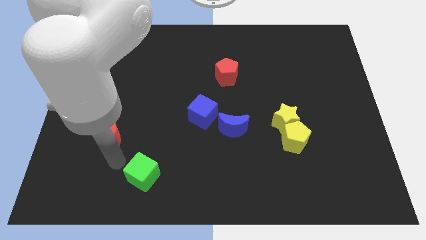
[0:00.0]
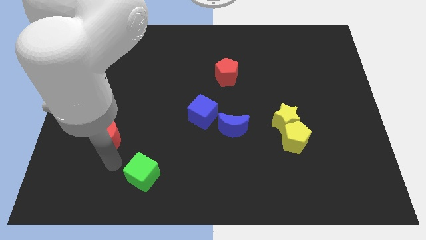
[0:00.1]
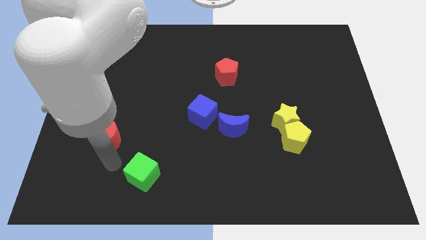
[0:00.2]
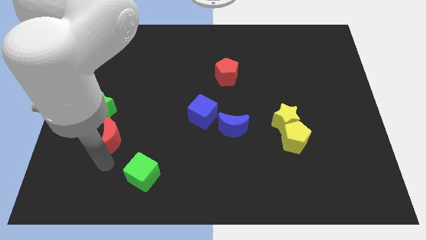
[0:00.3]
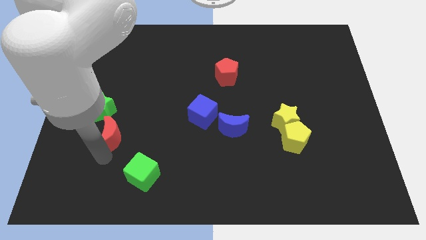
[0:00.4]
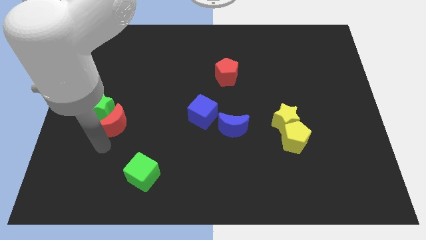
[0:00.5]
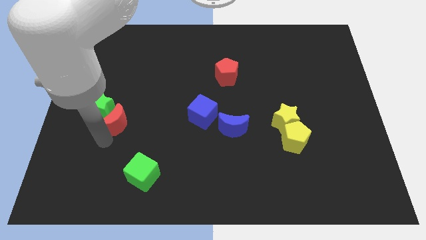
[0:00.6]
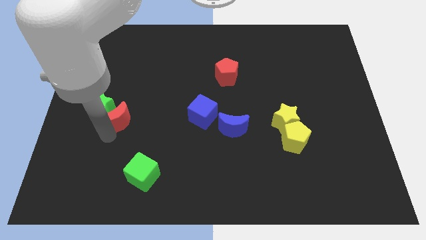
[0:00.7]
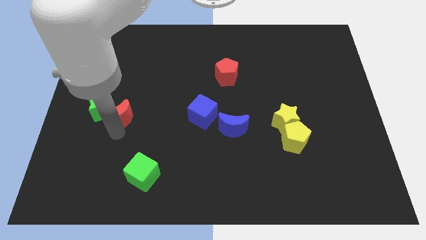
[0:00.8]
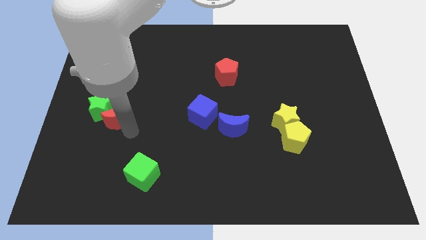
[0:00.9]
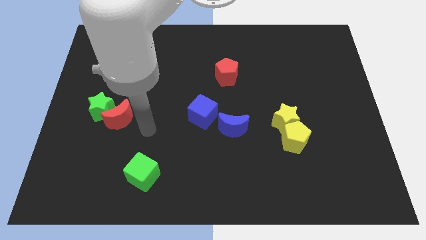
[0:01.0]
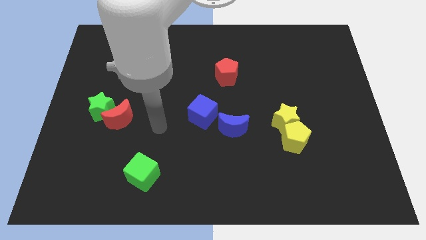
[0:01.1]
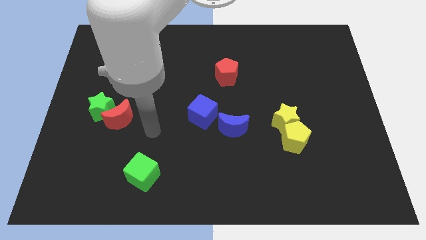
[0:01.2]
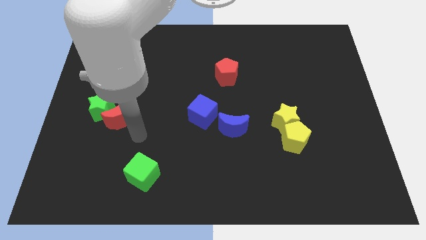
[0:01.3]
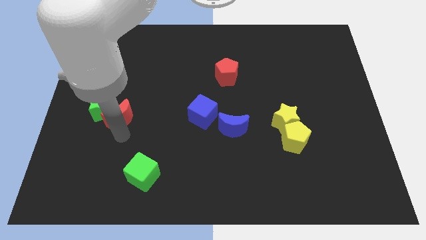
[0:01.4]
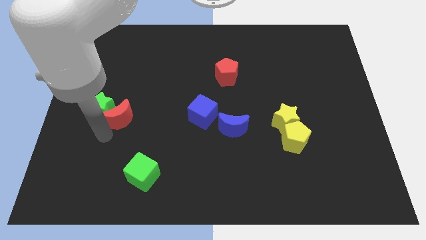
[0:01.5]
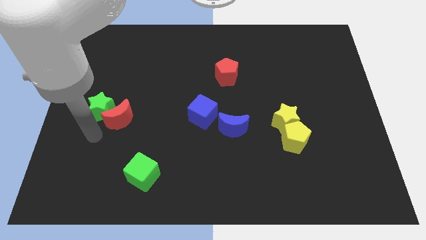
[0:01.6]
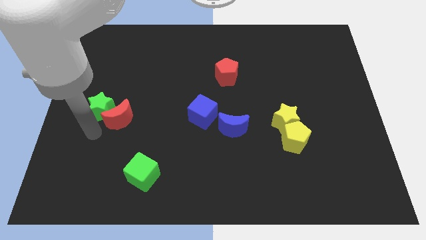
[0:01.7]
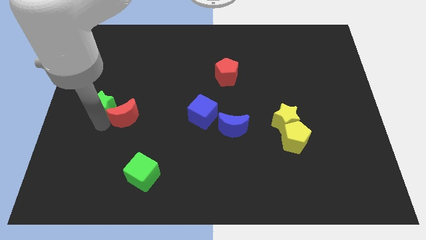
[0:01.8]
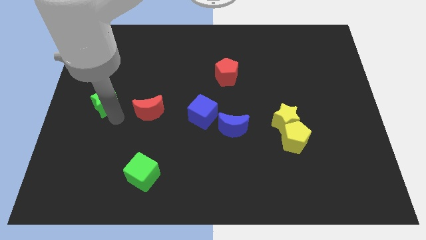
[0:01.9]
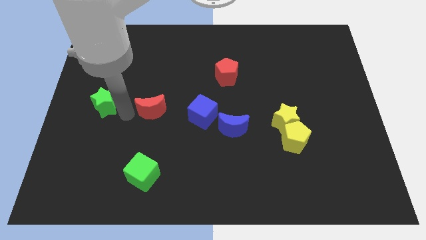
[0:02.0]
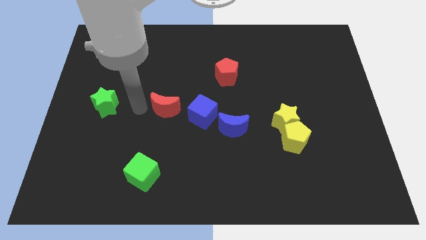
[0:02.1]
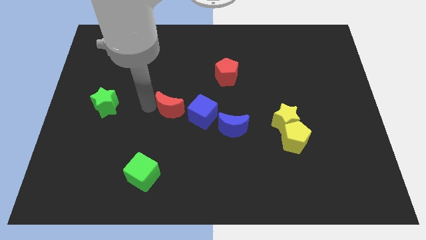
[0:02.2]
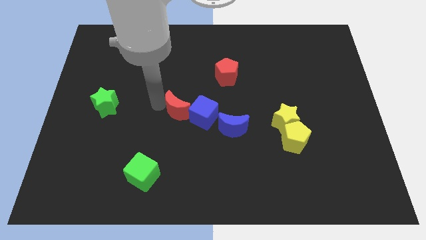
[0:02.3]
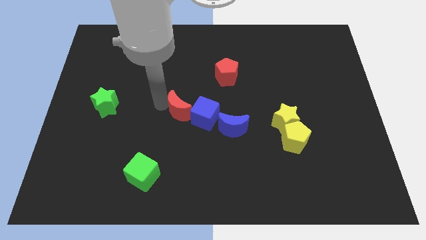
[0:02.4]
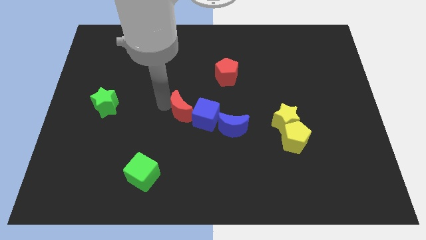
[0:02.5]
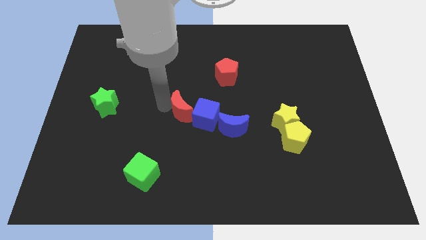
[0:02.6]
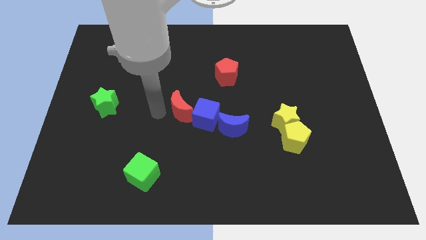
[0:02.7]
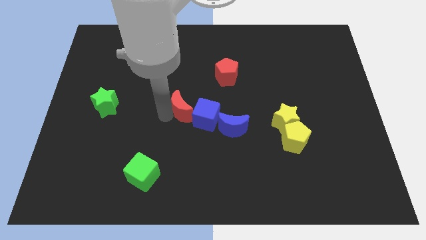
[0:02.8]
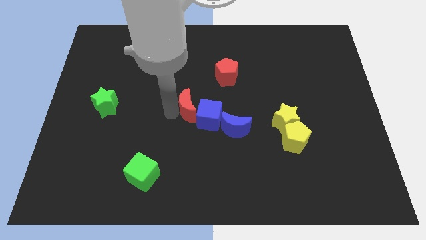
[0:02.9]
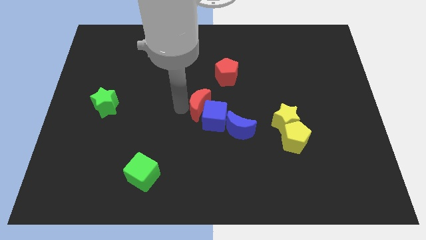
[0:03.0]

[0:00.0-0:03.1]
push the red crescent to the left of the blue cube

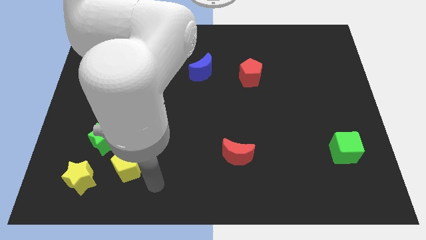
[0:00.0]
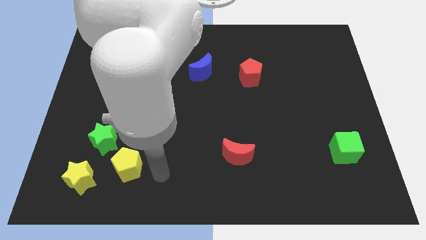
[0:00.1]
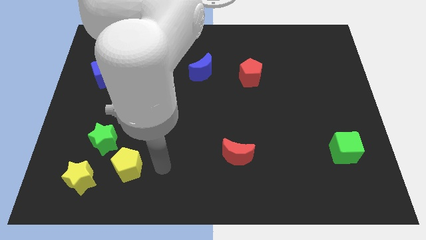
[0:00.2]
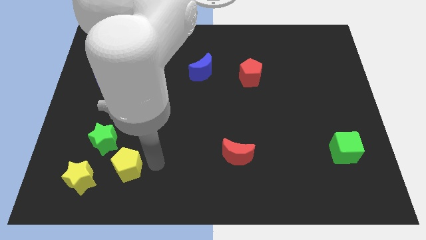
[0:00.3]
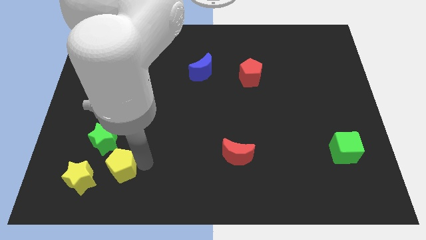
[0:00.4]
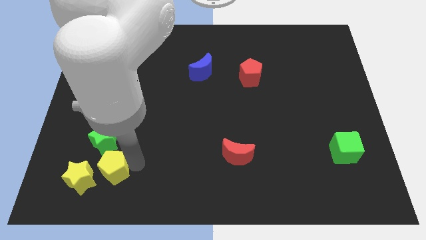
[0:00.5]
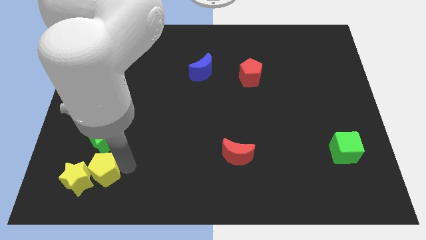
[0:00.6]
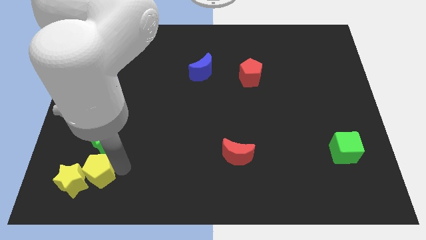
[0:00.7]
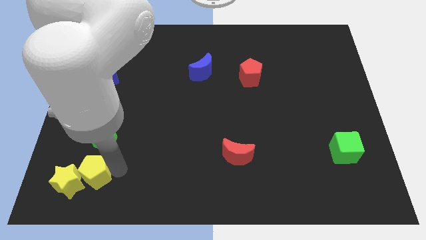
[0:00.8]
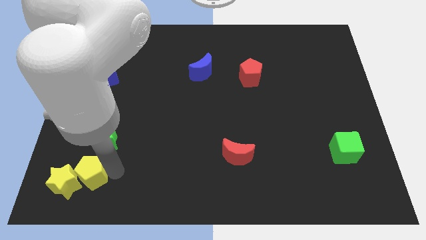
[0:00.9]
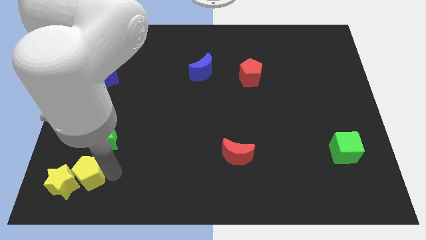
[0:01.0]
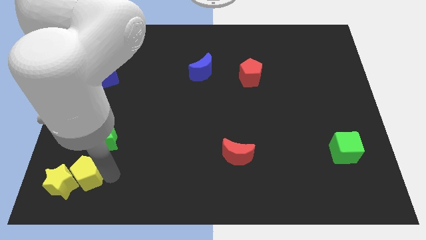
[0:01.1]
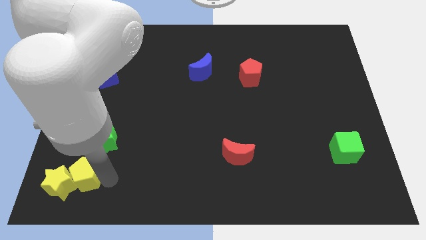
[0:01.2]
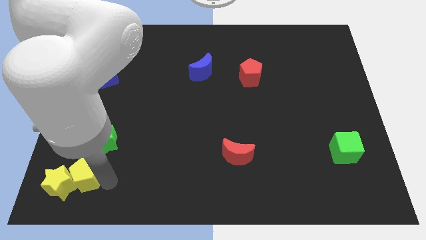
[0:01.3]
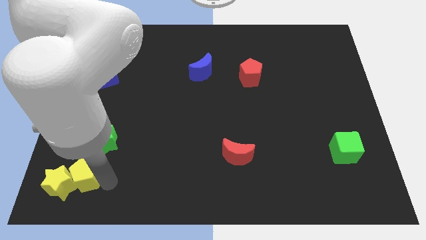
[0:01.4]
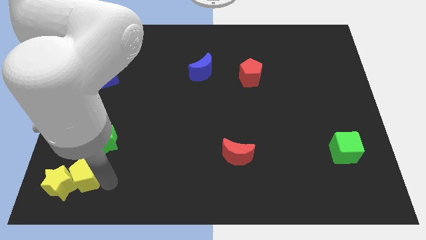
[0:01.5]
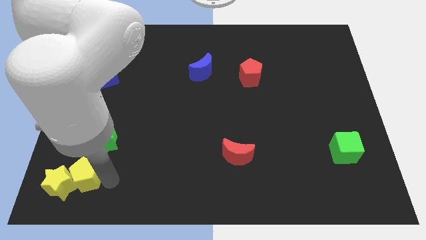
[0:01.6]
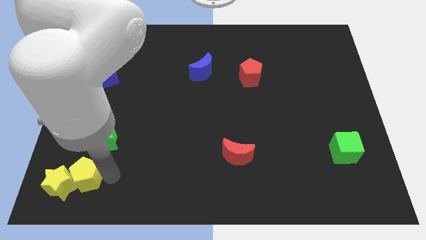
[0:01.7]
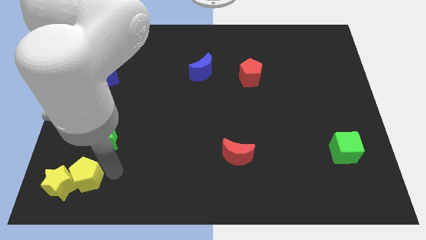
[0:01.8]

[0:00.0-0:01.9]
push the yellow pentagon into yellow star

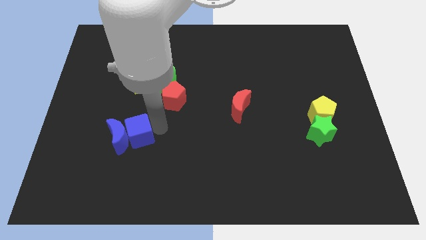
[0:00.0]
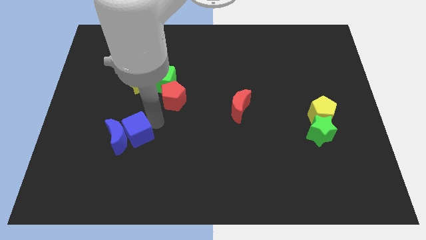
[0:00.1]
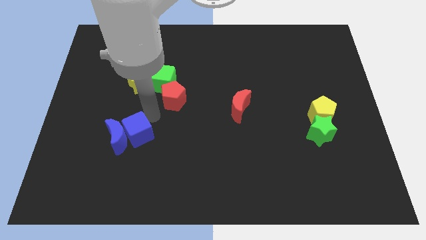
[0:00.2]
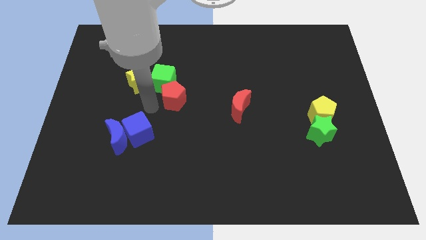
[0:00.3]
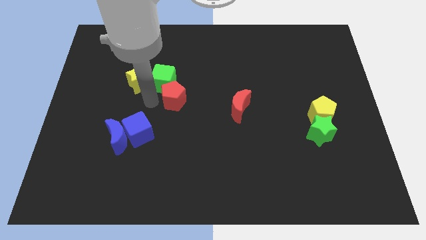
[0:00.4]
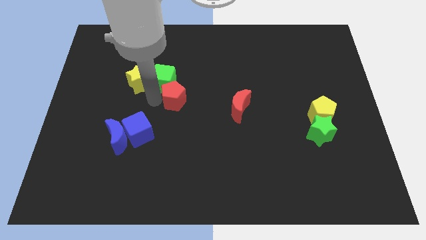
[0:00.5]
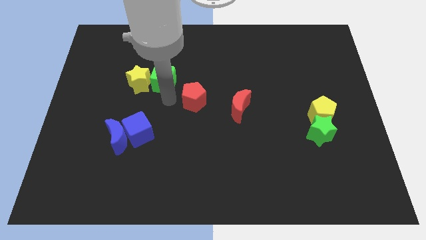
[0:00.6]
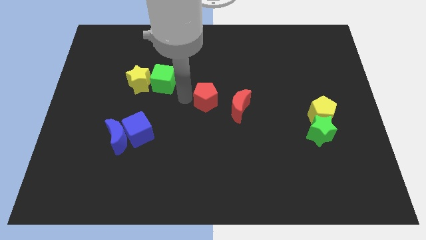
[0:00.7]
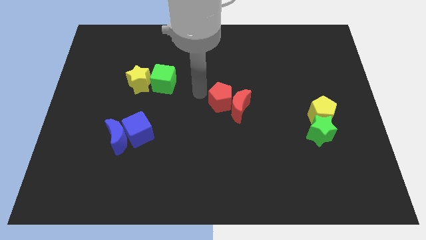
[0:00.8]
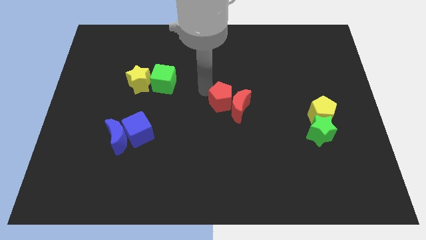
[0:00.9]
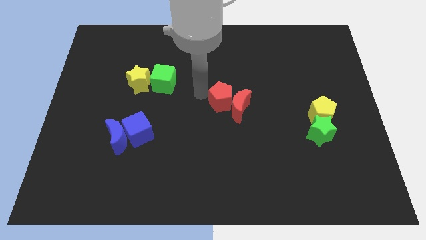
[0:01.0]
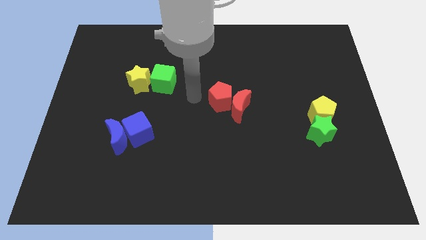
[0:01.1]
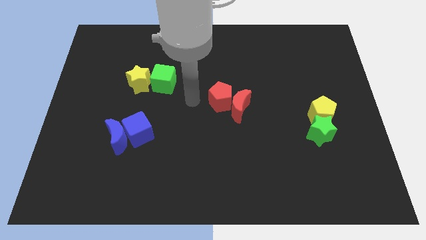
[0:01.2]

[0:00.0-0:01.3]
slide the red pentagon into the red crescent

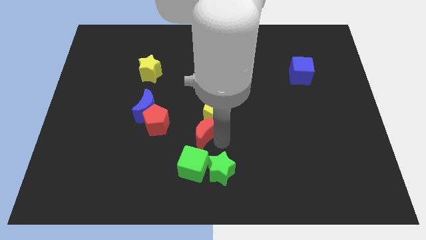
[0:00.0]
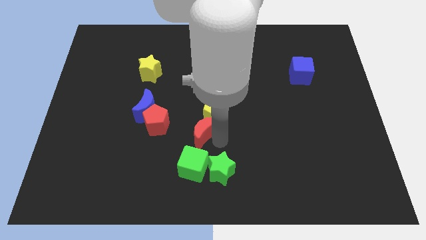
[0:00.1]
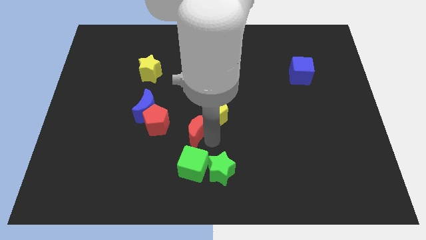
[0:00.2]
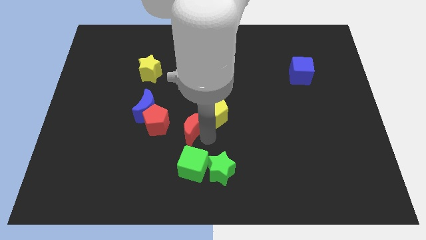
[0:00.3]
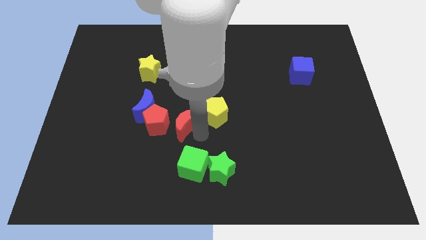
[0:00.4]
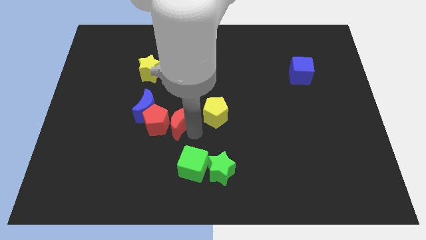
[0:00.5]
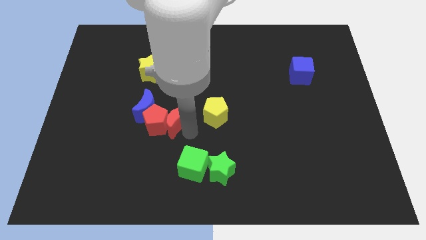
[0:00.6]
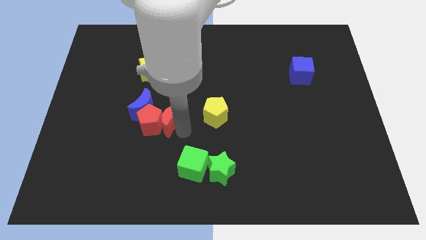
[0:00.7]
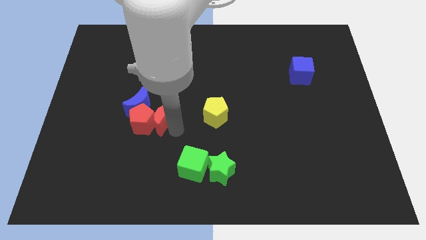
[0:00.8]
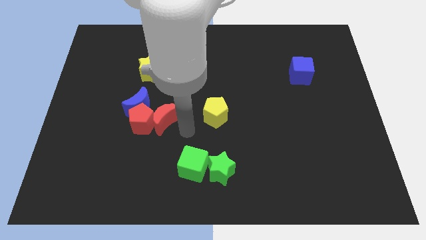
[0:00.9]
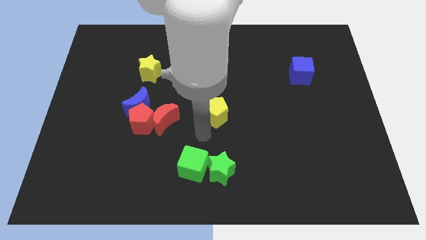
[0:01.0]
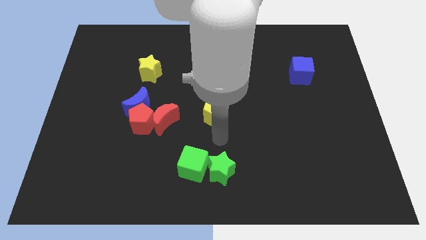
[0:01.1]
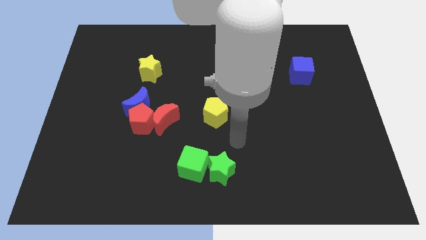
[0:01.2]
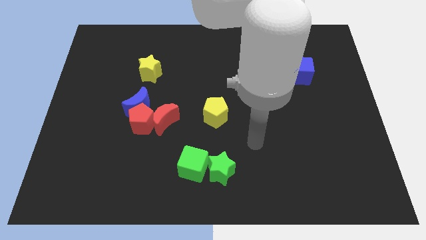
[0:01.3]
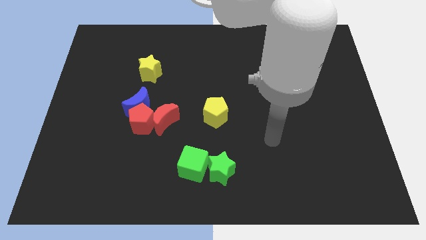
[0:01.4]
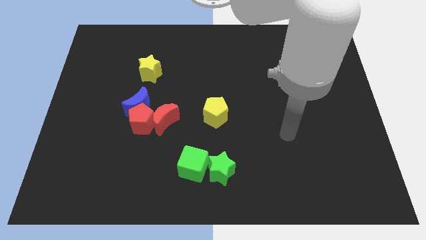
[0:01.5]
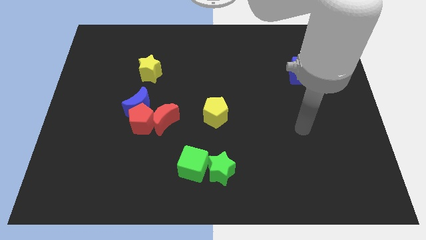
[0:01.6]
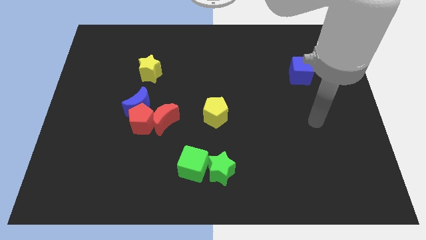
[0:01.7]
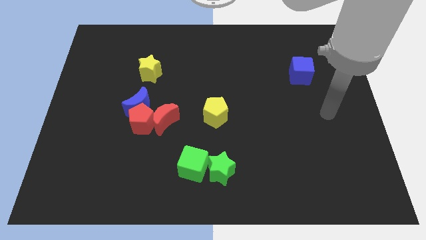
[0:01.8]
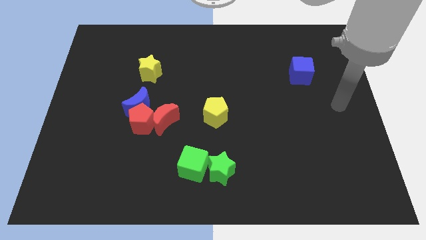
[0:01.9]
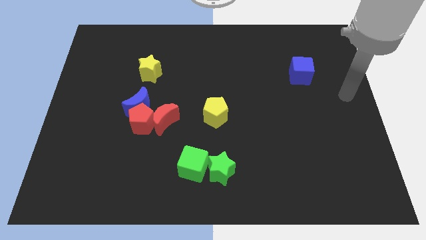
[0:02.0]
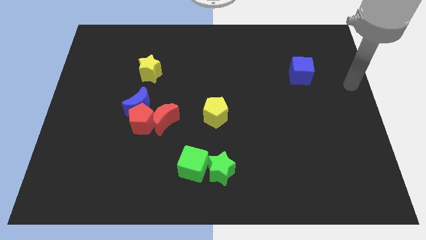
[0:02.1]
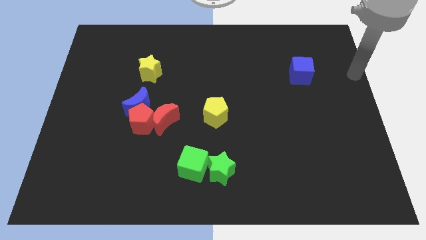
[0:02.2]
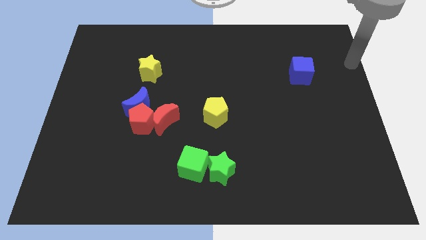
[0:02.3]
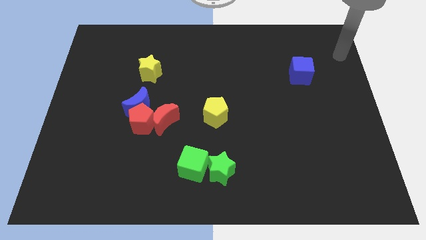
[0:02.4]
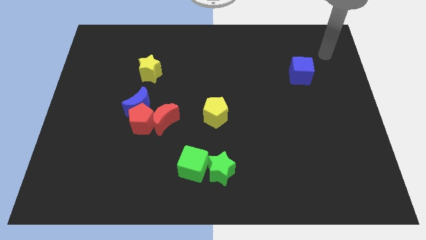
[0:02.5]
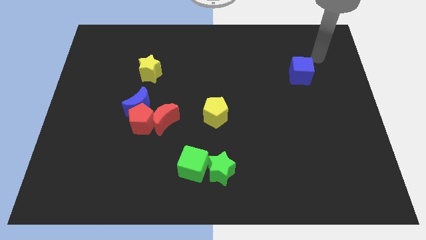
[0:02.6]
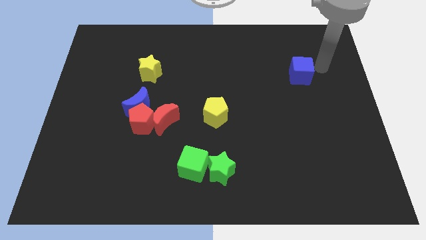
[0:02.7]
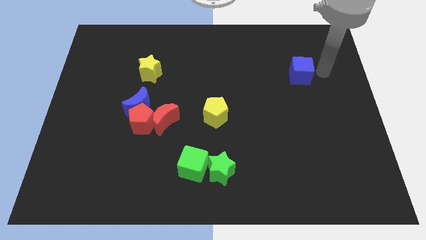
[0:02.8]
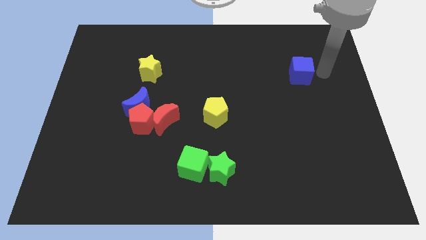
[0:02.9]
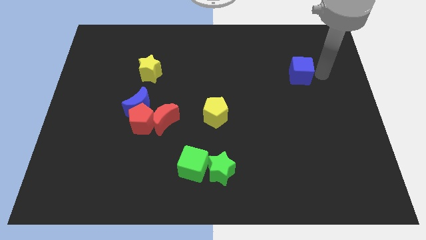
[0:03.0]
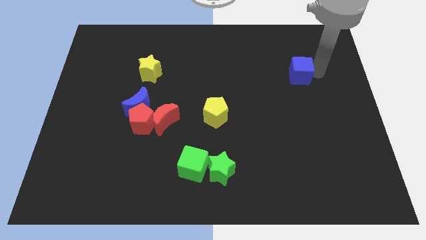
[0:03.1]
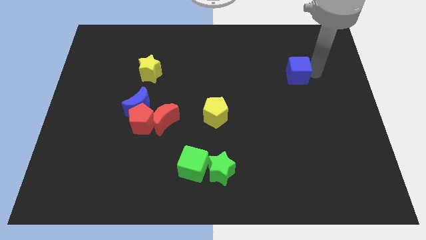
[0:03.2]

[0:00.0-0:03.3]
push the red moon into the red pentagon
